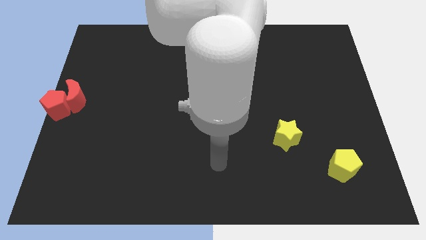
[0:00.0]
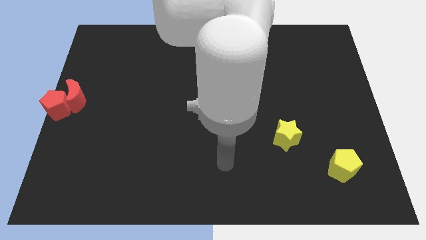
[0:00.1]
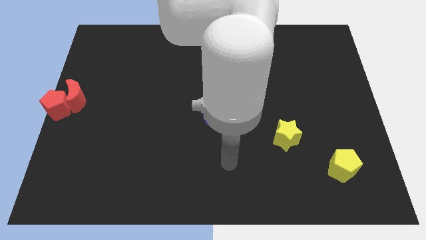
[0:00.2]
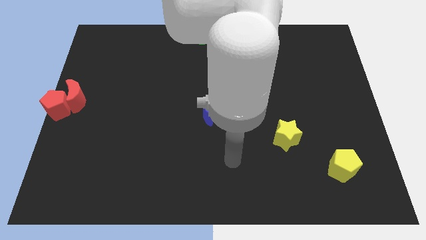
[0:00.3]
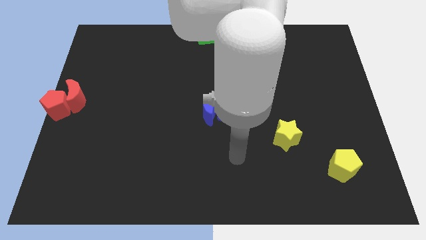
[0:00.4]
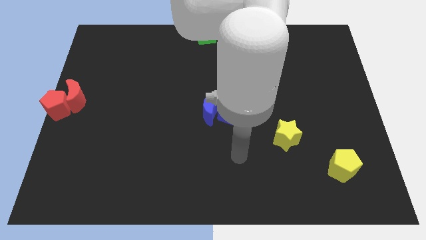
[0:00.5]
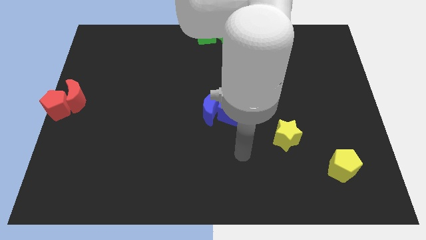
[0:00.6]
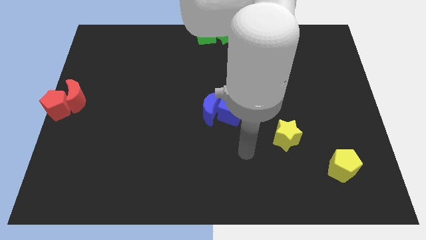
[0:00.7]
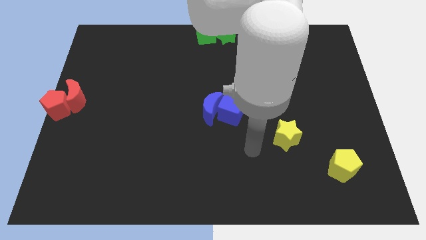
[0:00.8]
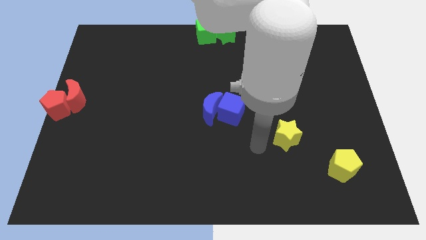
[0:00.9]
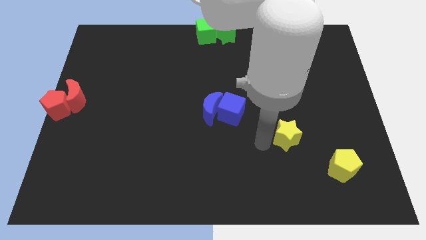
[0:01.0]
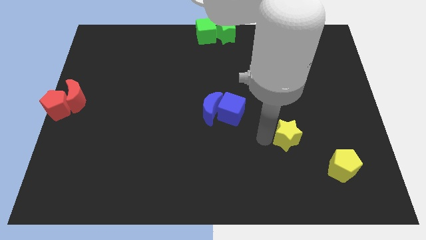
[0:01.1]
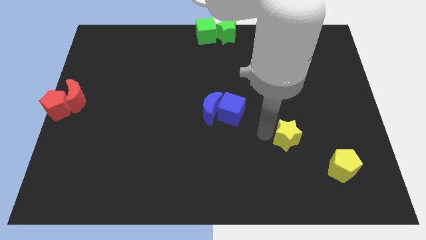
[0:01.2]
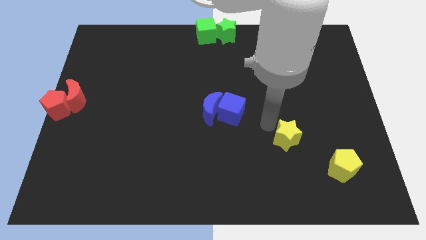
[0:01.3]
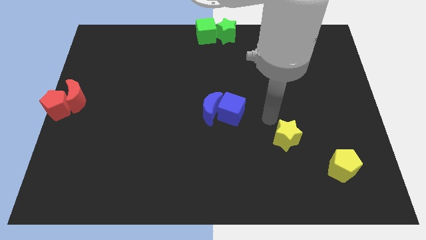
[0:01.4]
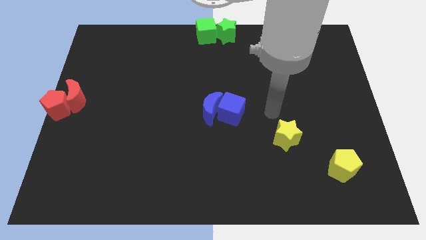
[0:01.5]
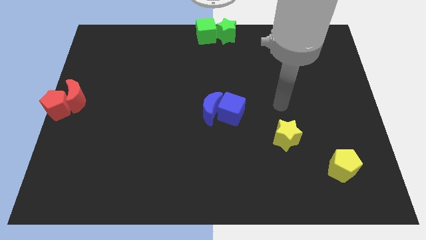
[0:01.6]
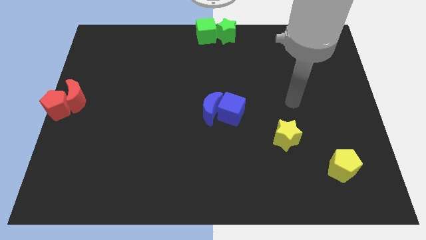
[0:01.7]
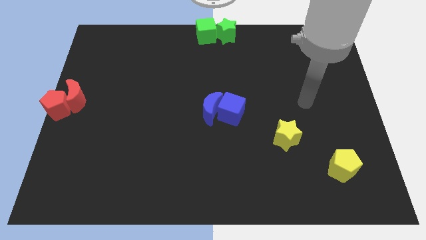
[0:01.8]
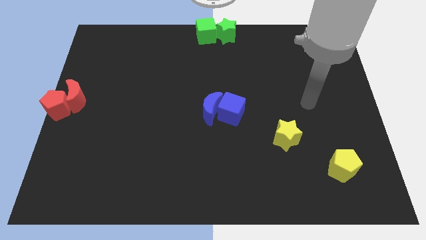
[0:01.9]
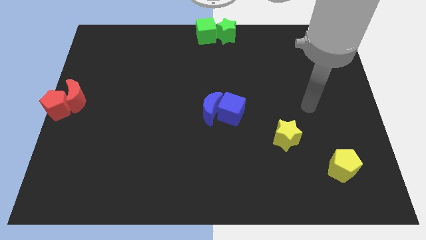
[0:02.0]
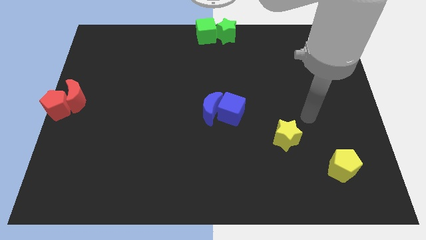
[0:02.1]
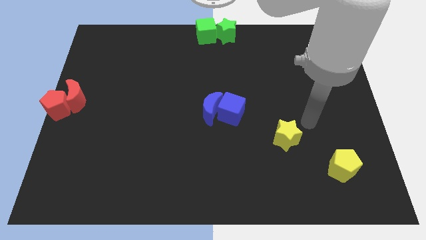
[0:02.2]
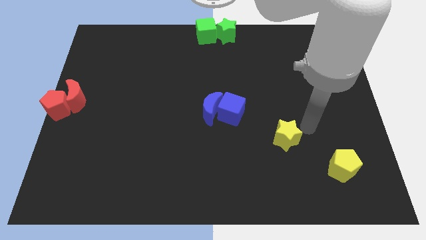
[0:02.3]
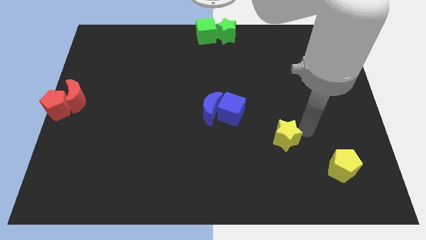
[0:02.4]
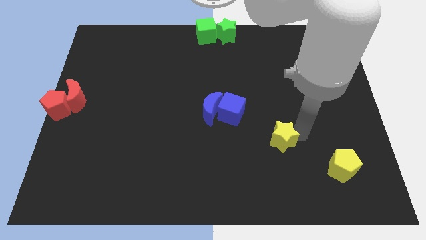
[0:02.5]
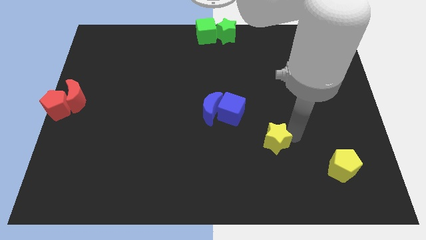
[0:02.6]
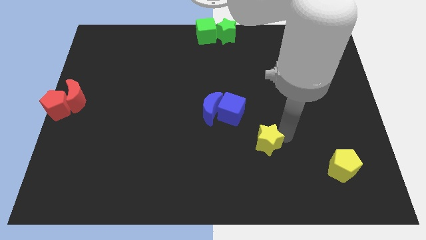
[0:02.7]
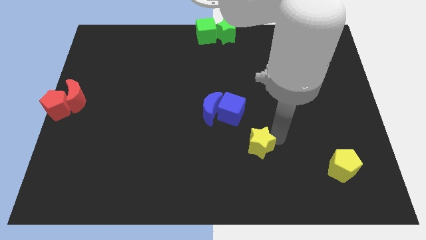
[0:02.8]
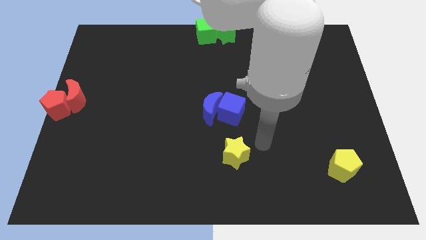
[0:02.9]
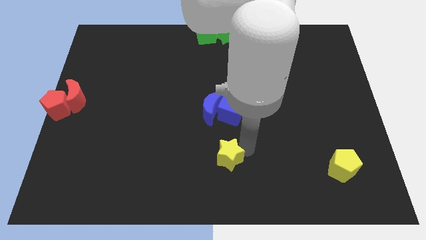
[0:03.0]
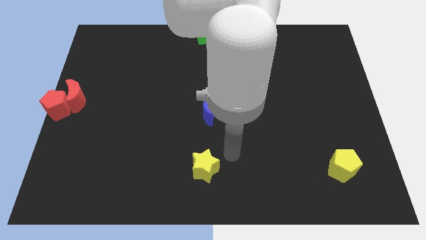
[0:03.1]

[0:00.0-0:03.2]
place the yellow star below the blue cube

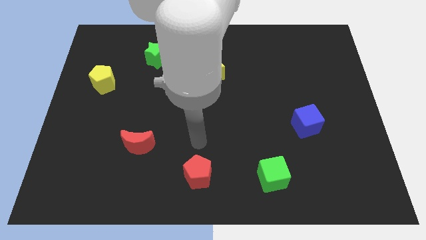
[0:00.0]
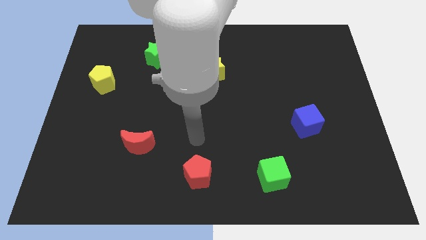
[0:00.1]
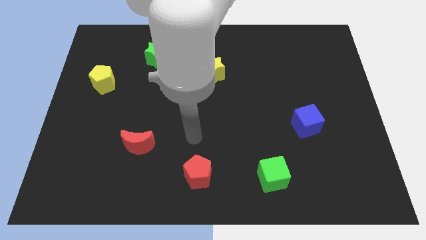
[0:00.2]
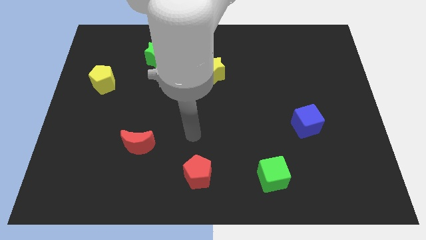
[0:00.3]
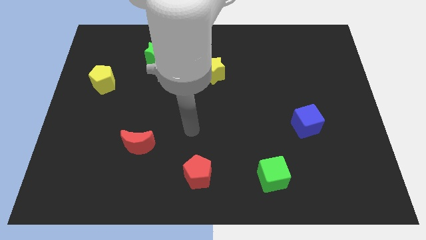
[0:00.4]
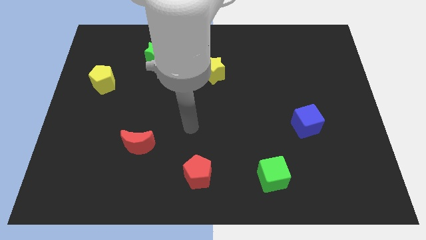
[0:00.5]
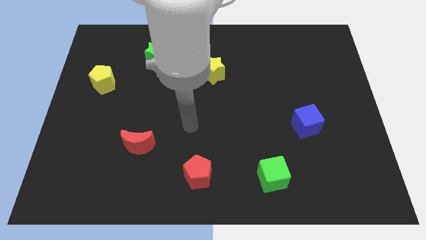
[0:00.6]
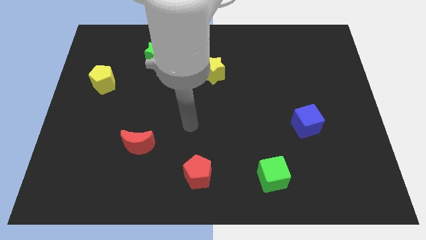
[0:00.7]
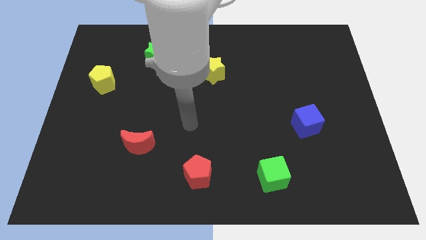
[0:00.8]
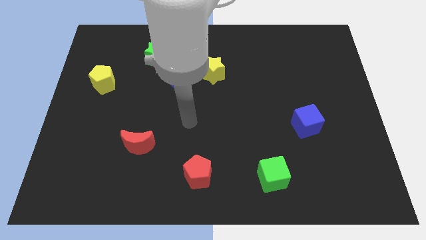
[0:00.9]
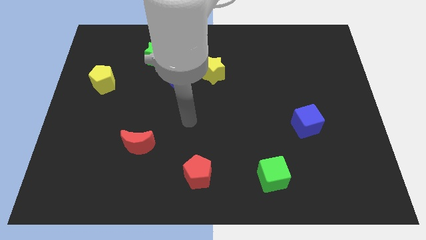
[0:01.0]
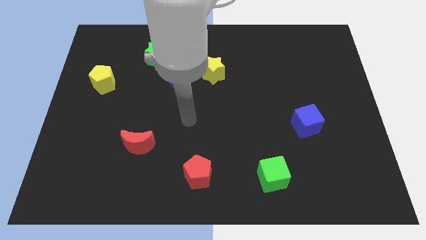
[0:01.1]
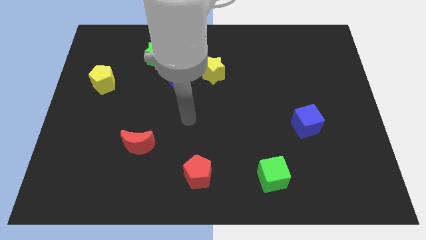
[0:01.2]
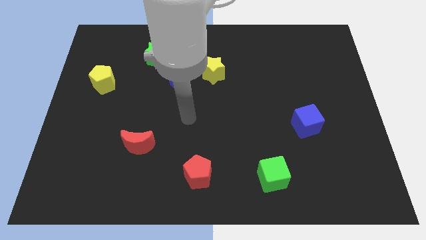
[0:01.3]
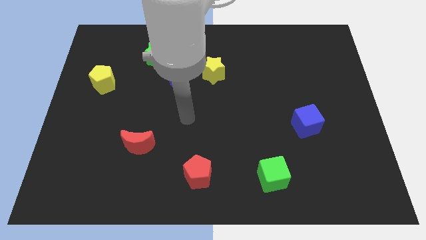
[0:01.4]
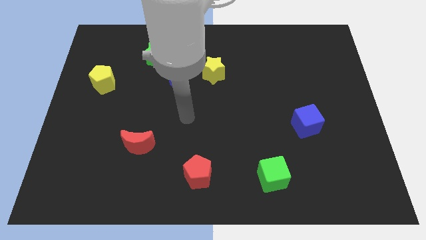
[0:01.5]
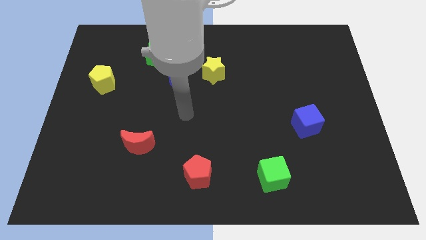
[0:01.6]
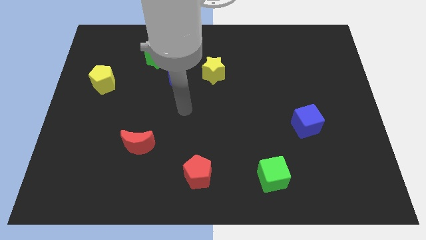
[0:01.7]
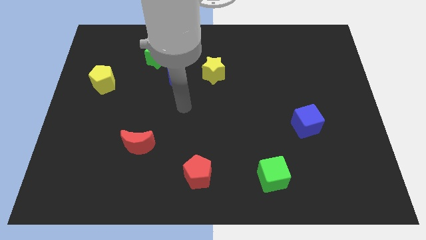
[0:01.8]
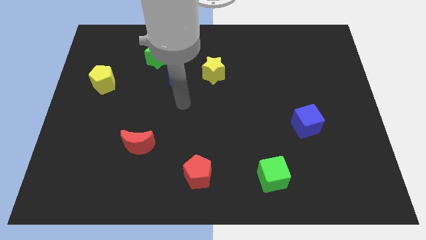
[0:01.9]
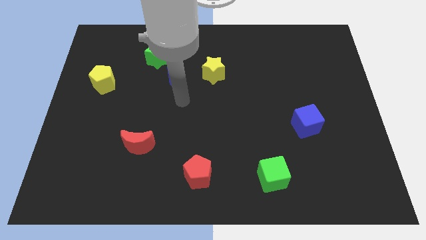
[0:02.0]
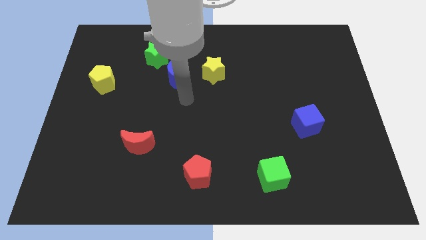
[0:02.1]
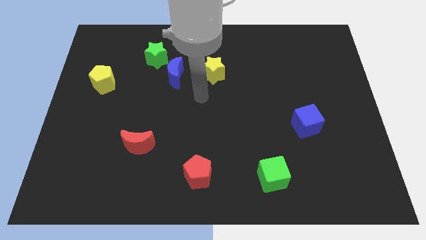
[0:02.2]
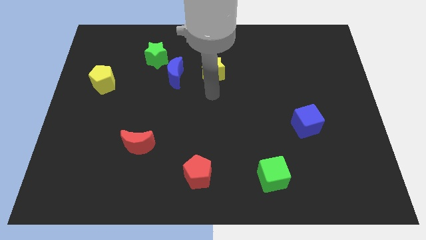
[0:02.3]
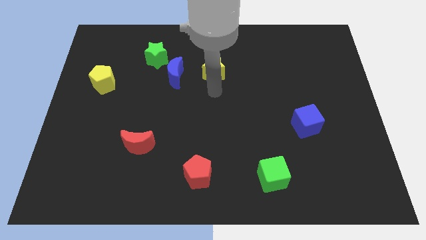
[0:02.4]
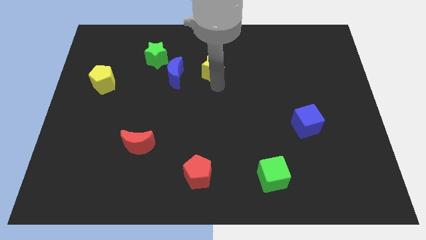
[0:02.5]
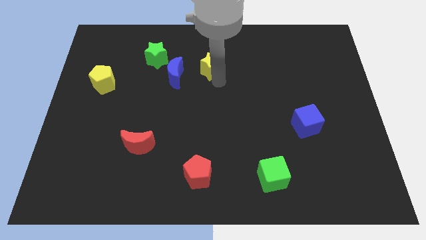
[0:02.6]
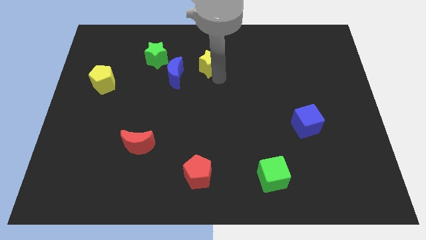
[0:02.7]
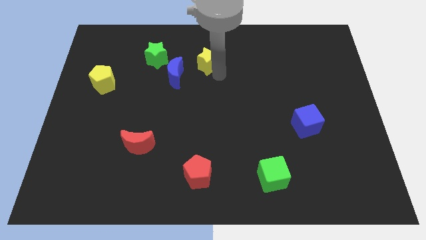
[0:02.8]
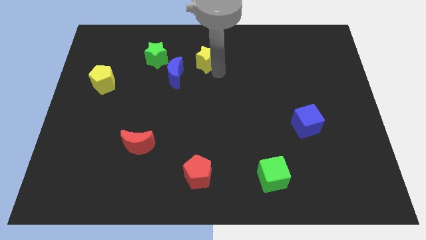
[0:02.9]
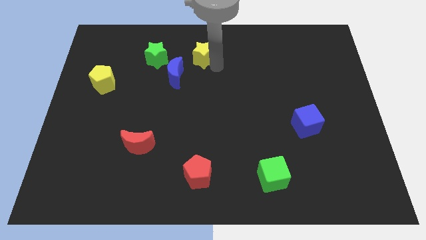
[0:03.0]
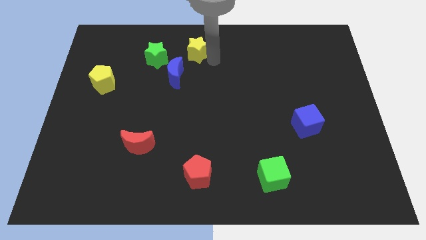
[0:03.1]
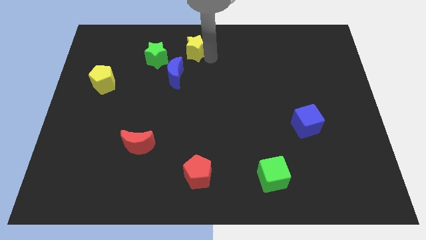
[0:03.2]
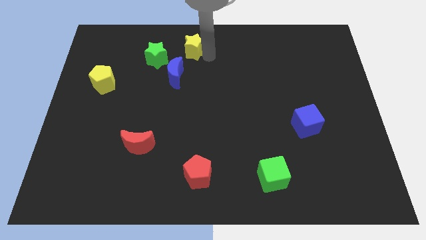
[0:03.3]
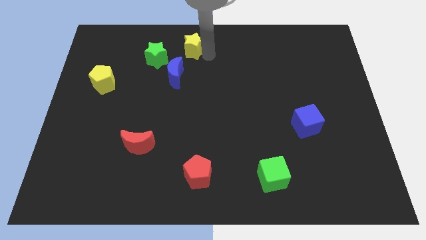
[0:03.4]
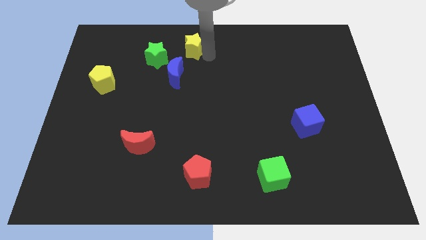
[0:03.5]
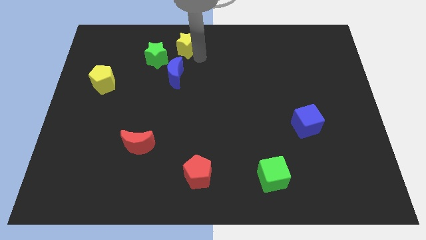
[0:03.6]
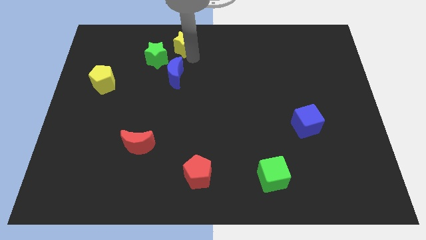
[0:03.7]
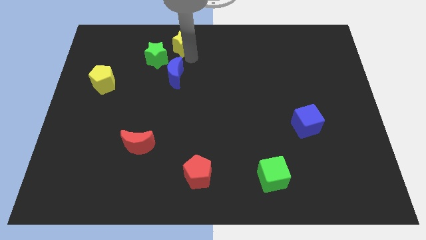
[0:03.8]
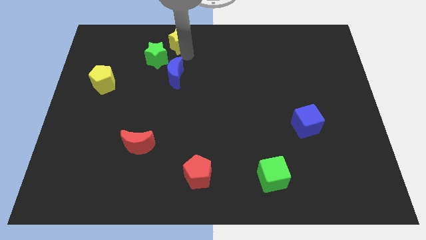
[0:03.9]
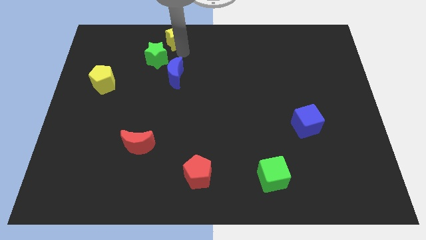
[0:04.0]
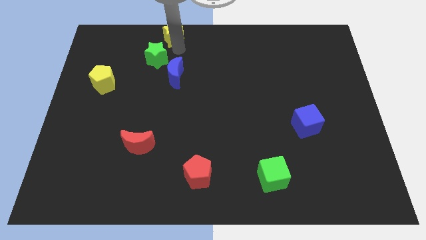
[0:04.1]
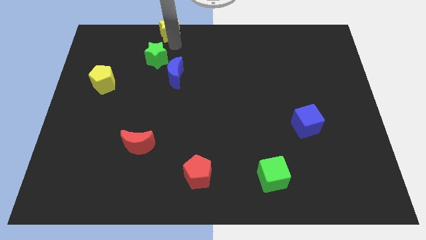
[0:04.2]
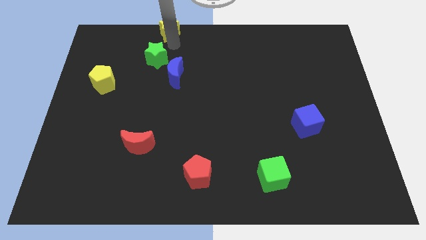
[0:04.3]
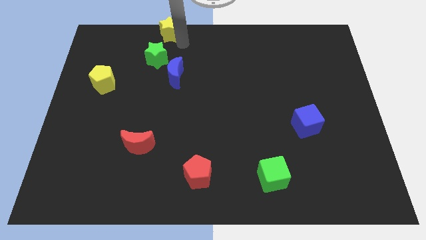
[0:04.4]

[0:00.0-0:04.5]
place the yellow star vertically above the blue crescent

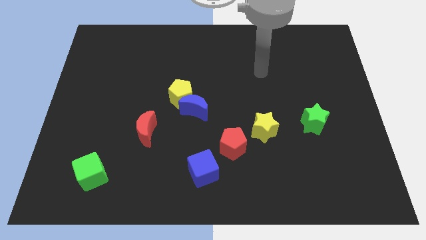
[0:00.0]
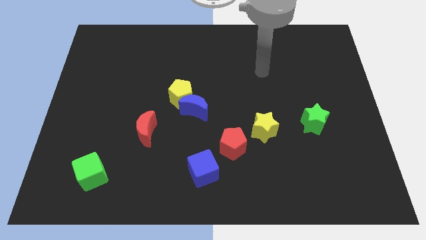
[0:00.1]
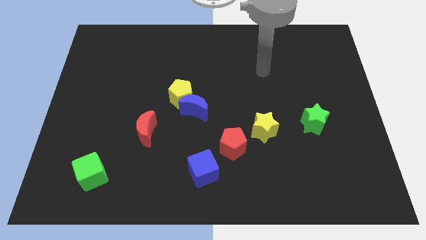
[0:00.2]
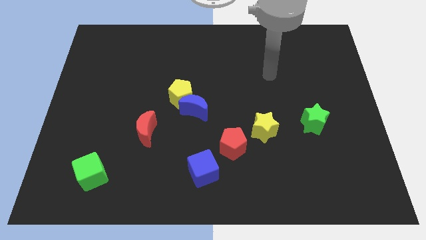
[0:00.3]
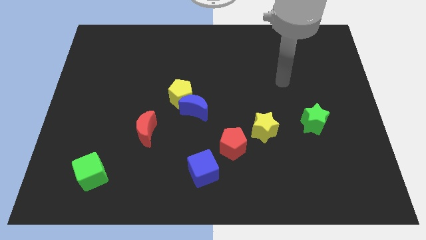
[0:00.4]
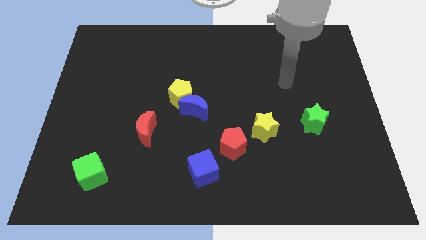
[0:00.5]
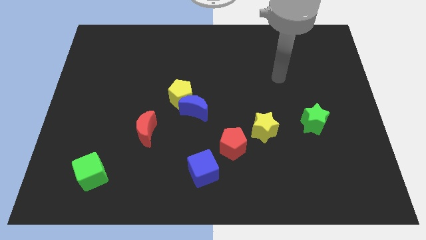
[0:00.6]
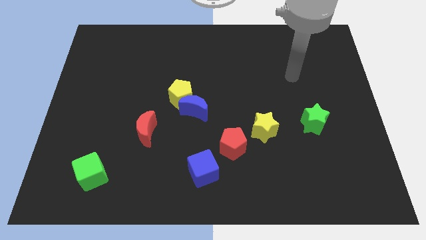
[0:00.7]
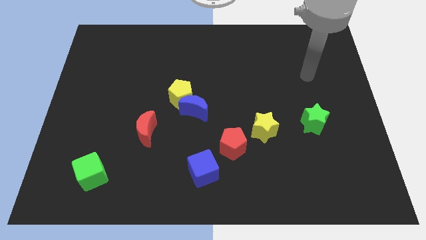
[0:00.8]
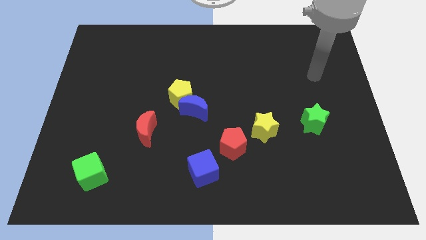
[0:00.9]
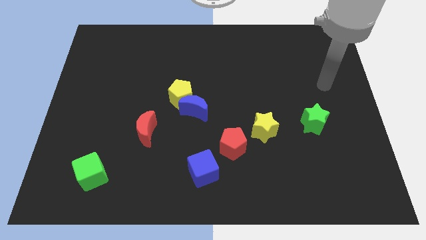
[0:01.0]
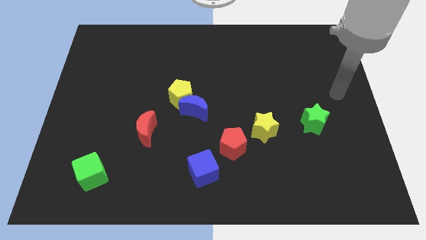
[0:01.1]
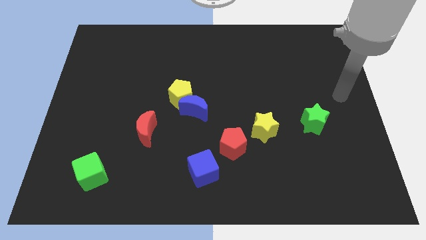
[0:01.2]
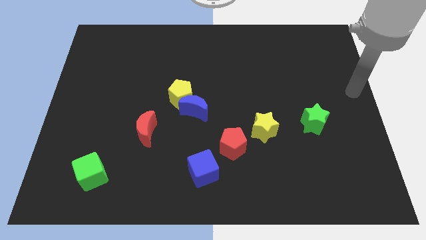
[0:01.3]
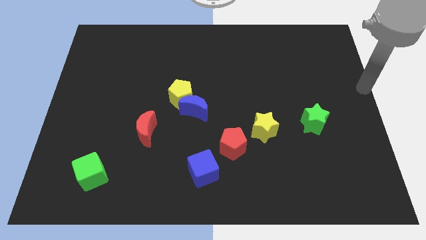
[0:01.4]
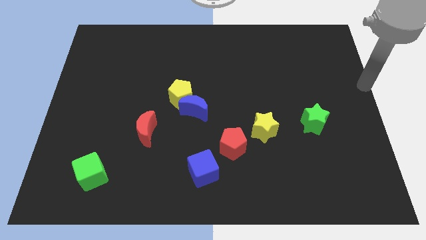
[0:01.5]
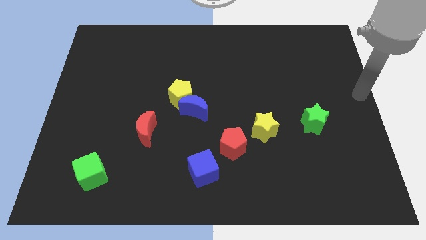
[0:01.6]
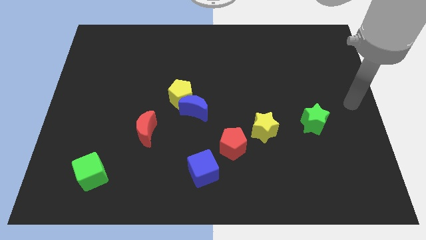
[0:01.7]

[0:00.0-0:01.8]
move your arm to the right
